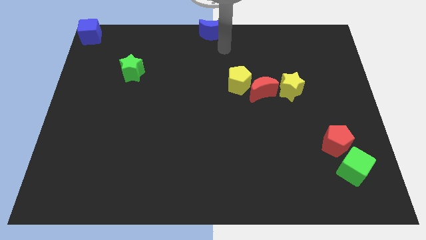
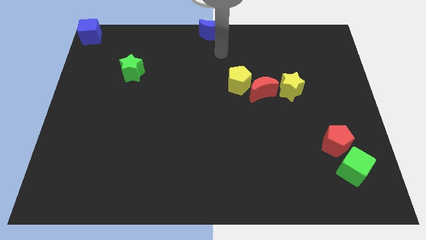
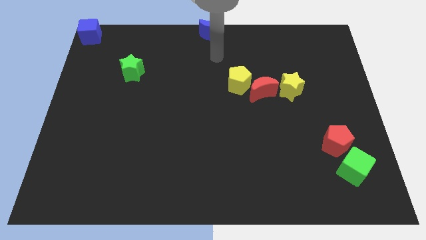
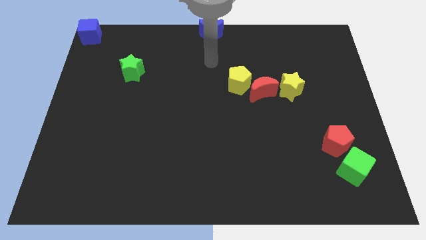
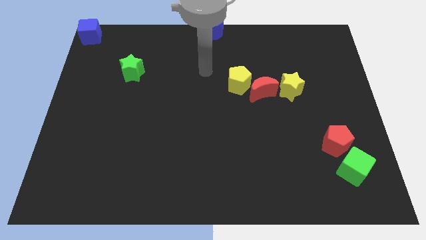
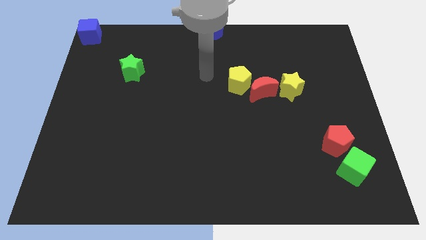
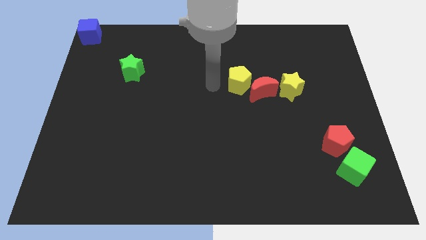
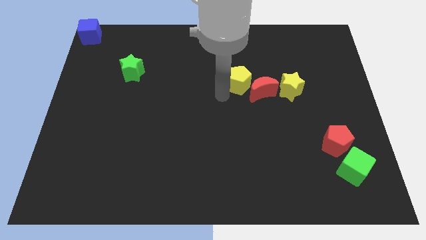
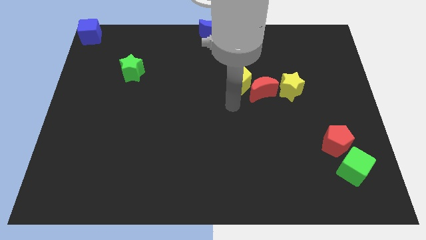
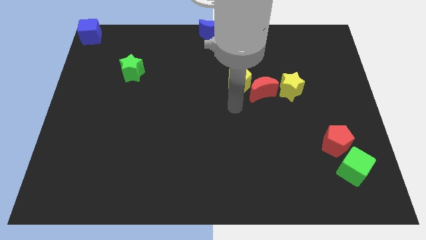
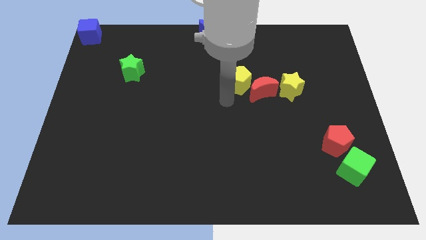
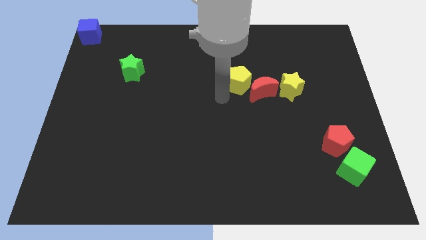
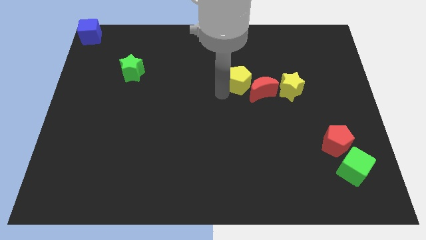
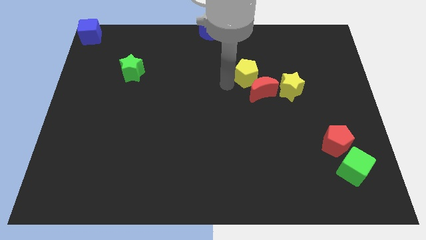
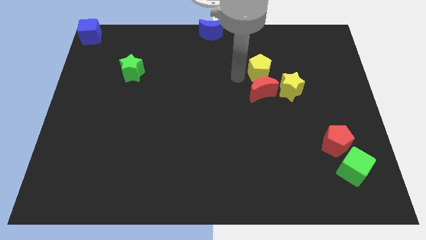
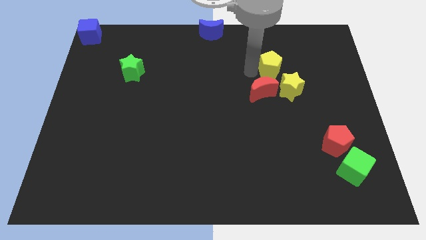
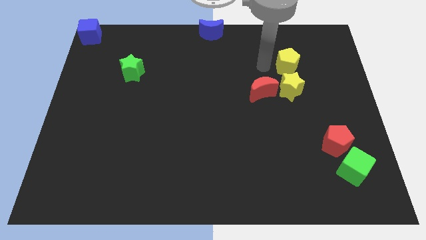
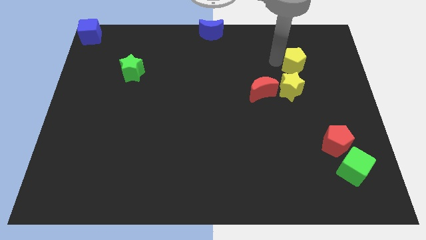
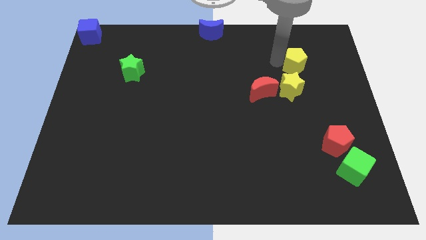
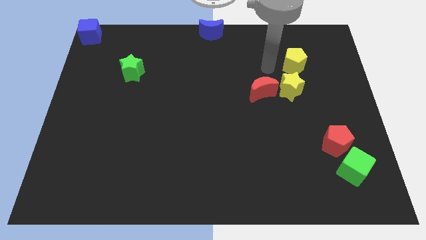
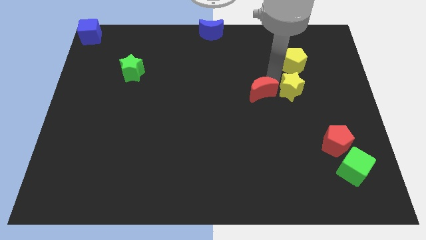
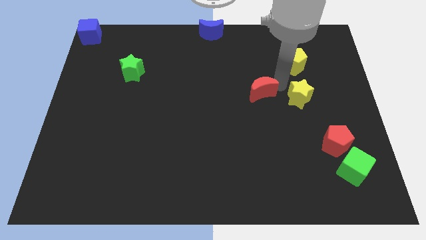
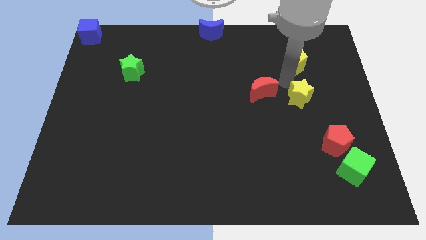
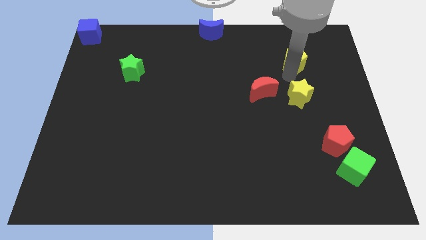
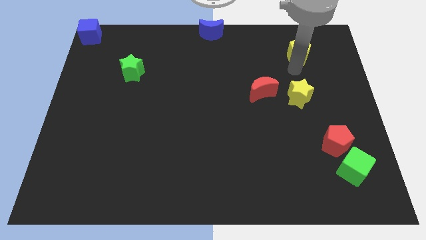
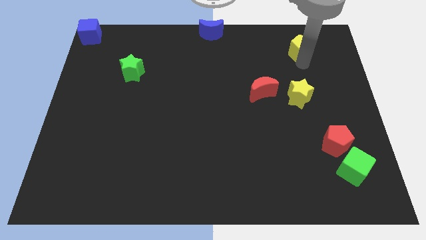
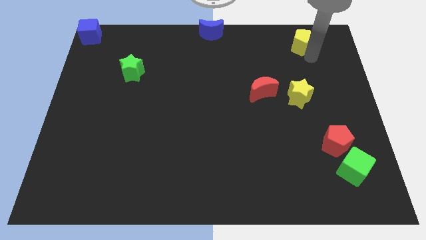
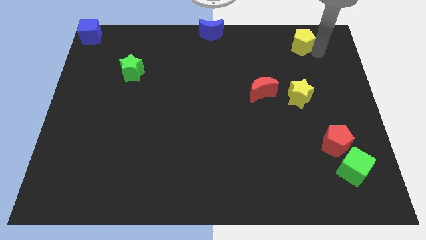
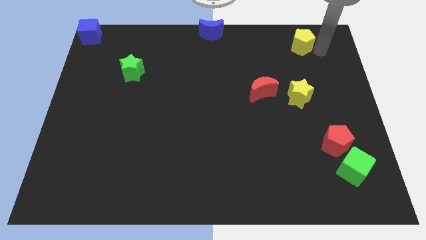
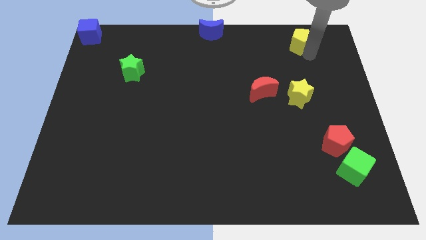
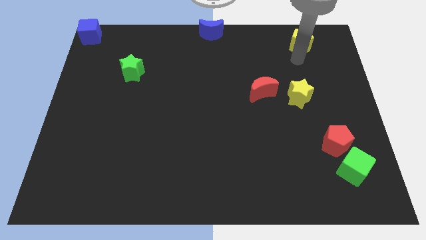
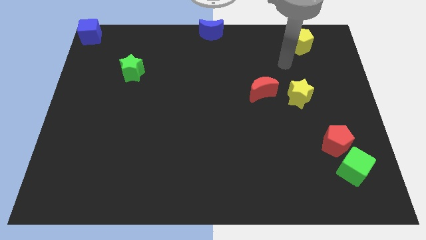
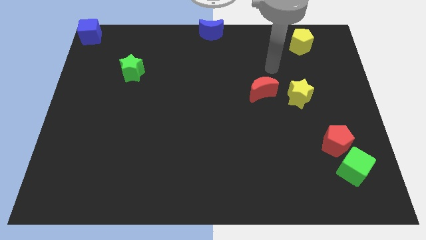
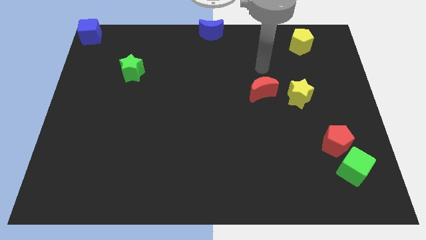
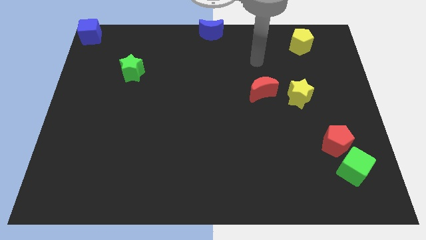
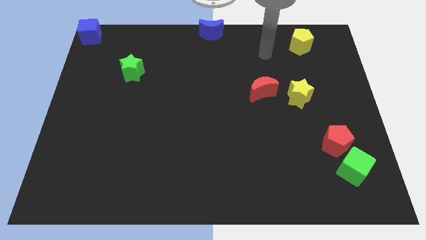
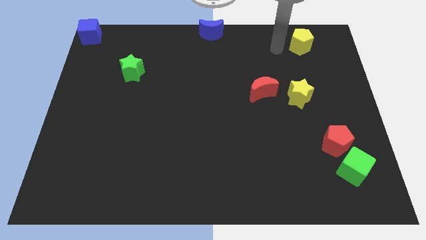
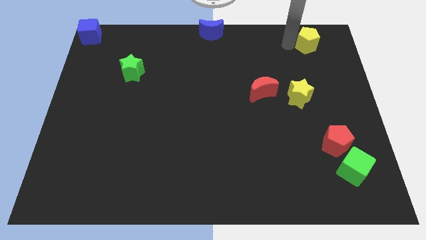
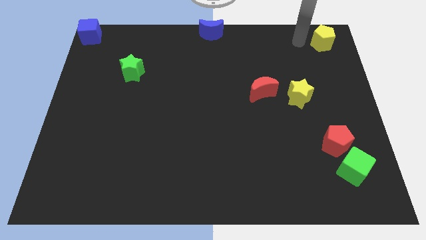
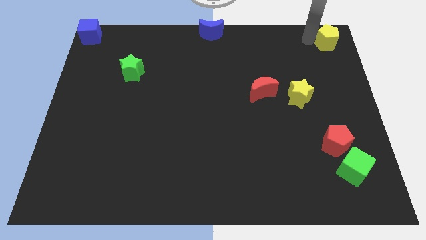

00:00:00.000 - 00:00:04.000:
place the yellow pentagon to top right

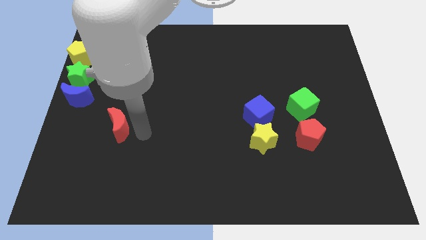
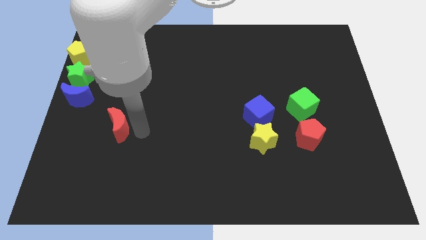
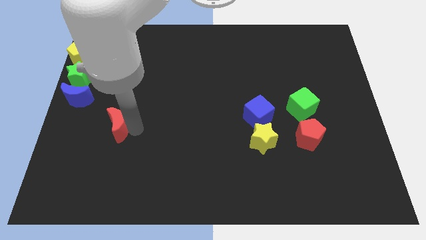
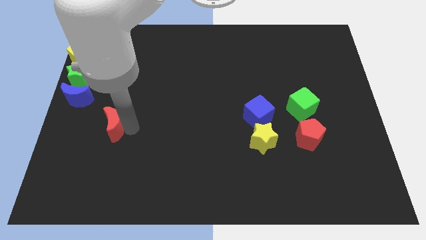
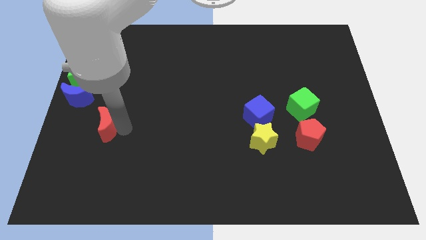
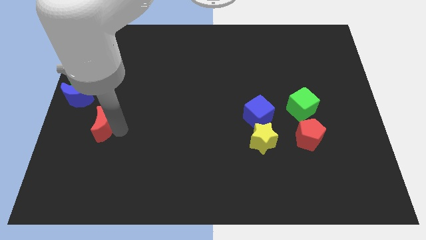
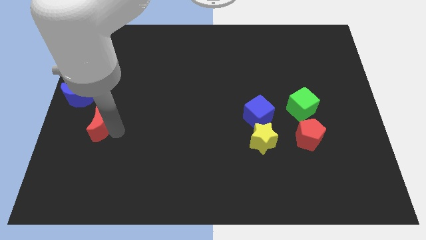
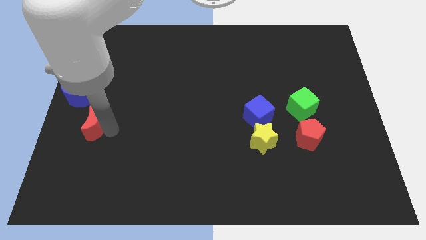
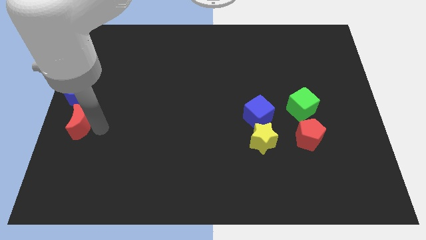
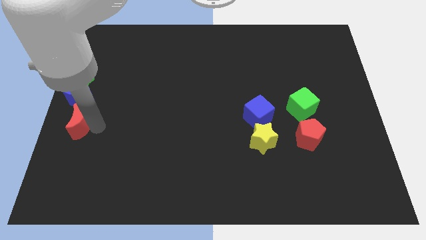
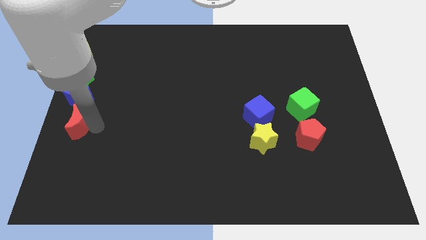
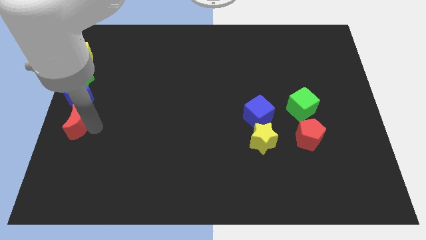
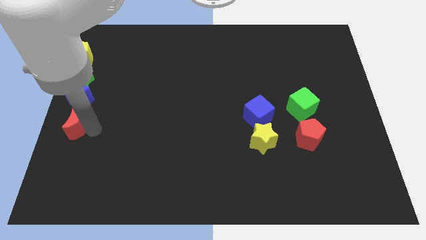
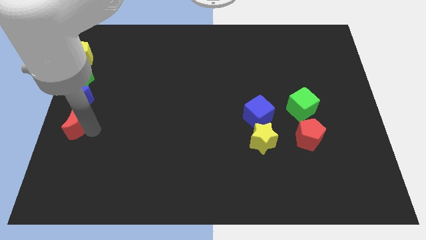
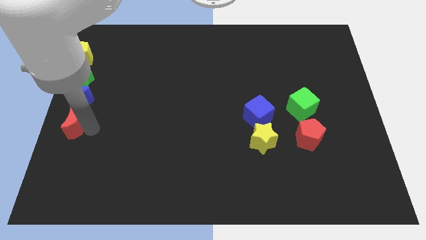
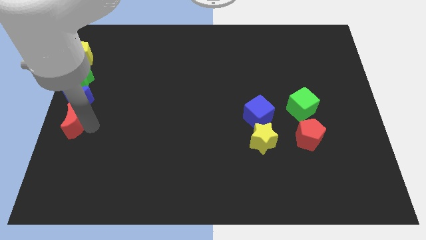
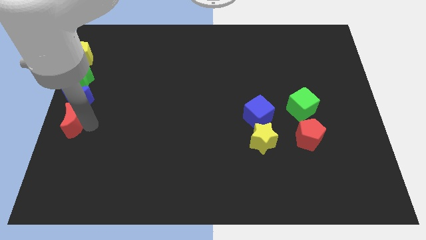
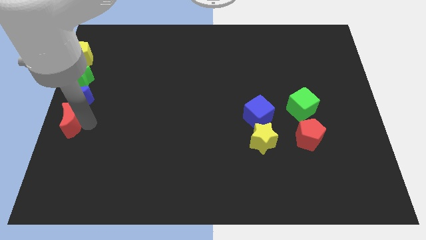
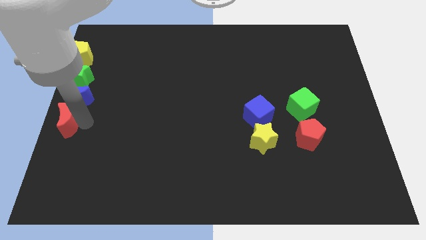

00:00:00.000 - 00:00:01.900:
place the red crescent below the blue crescent to form a vertical line

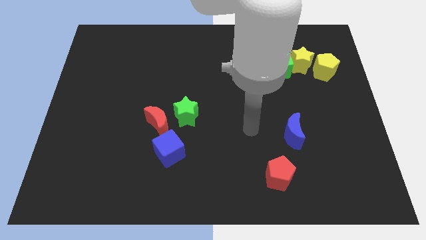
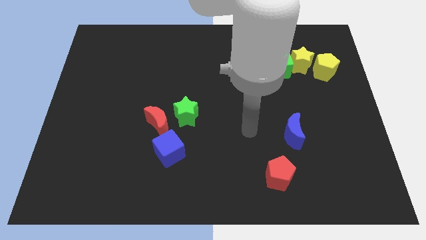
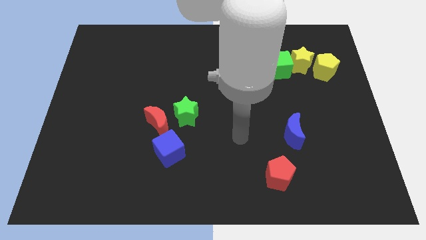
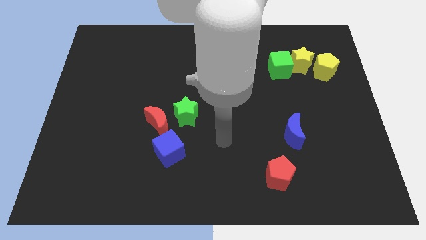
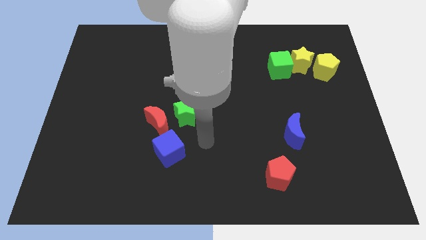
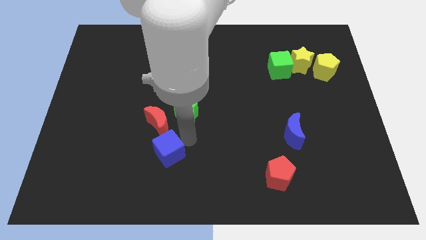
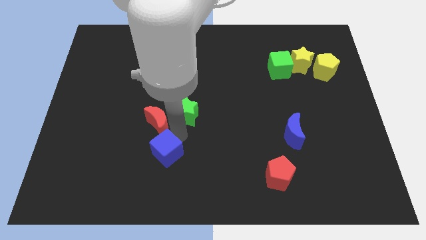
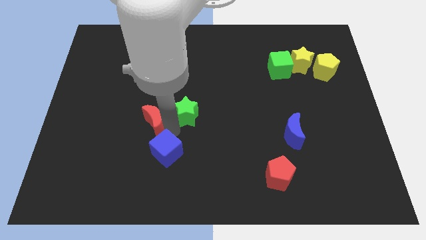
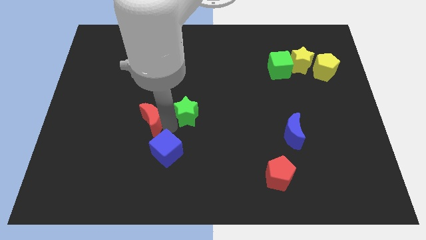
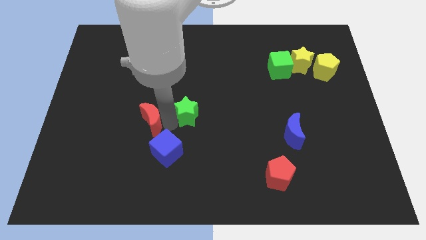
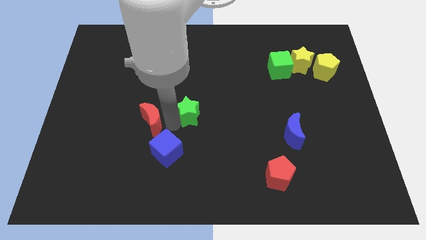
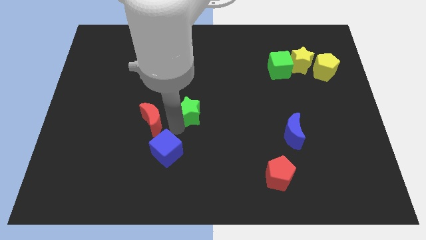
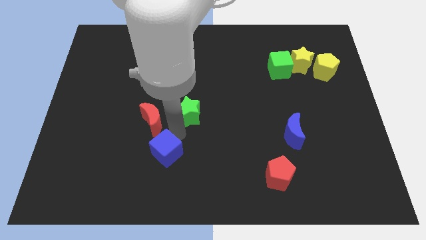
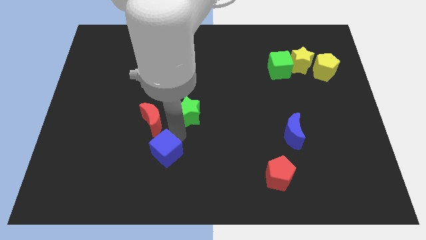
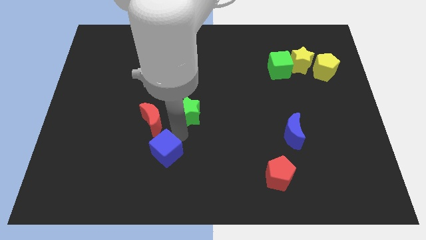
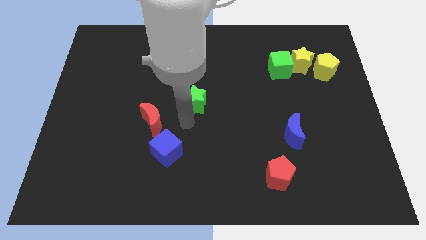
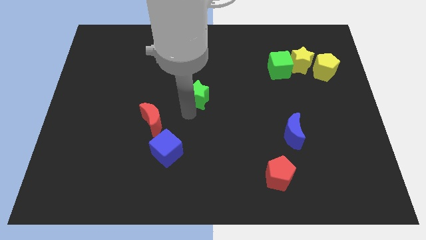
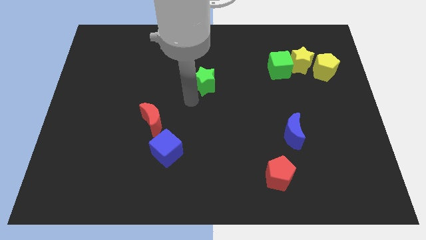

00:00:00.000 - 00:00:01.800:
move the green star away from the red moon

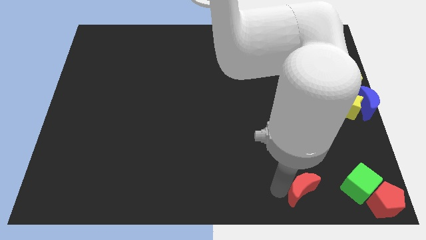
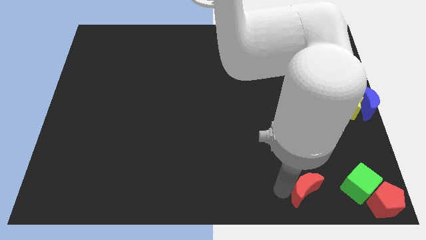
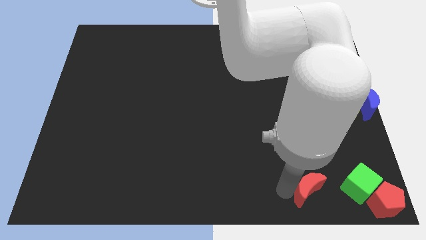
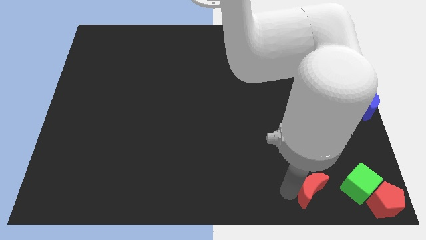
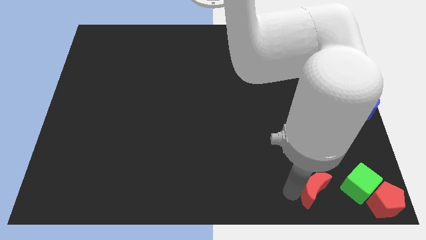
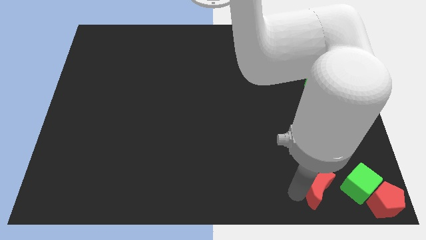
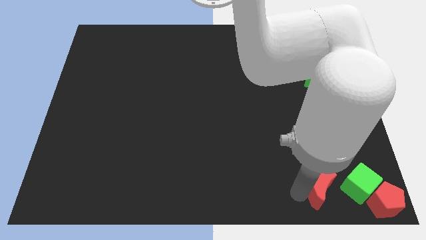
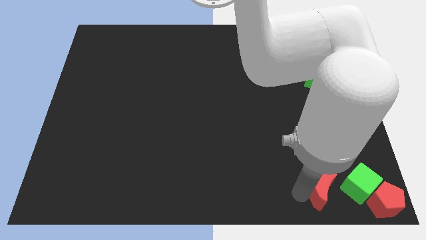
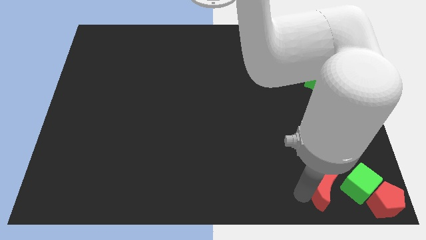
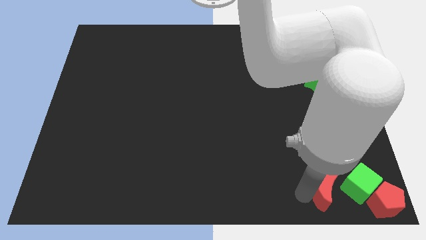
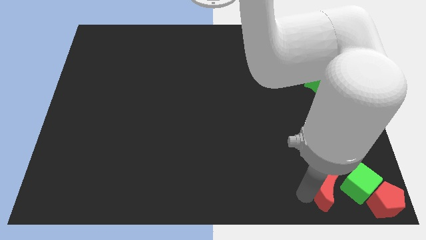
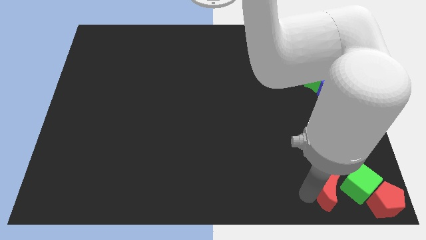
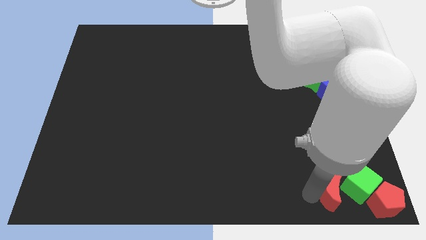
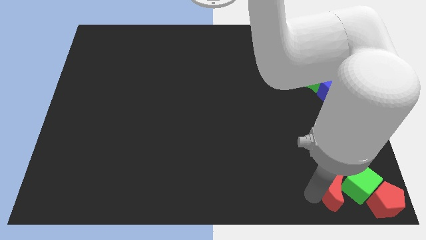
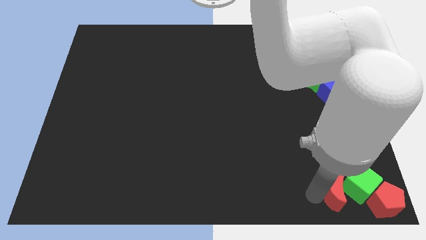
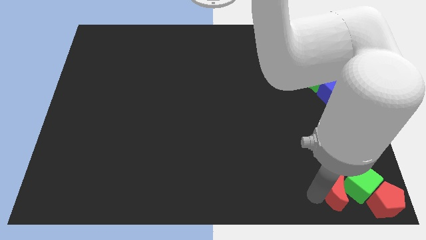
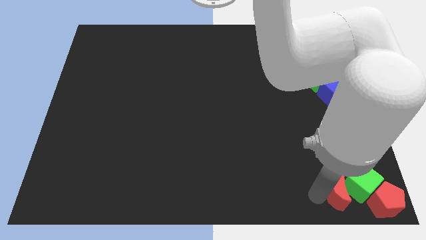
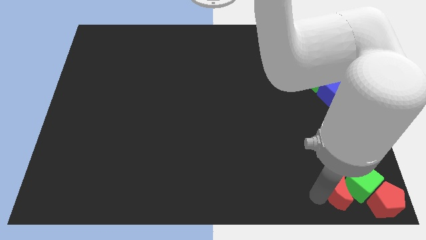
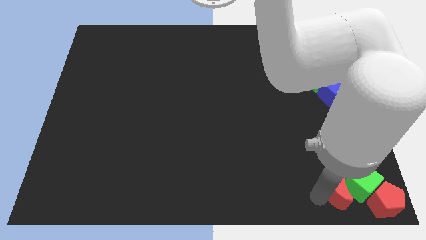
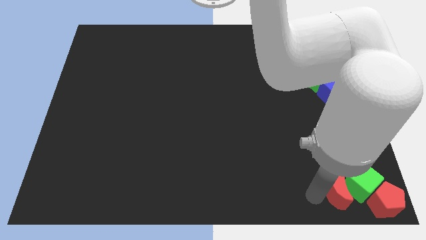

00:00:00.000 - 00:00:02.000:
put the red moon close to the green cube
